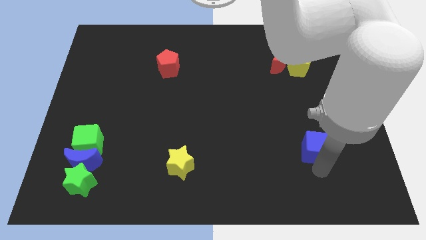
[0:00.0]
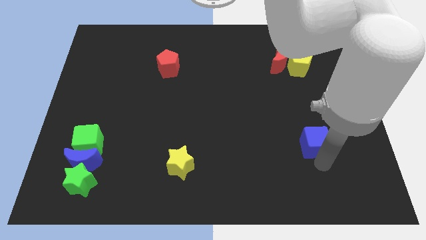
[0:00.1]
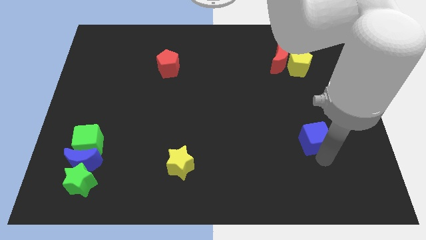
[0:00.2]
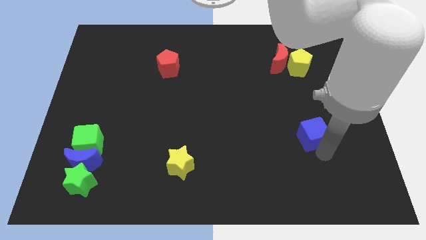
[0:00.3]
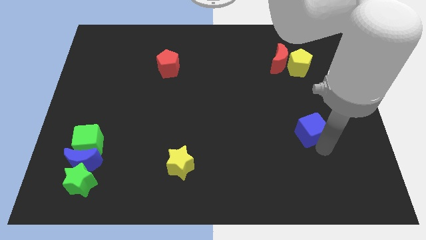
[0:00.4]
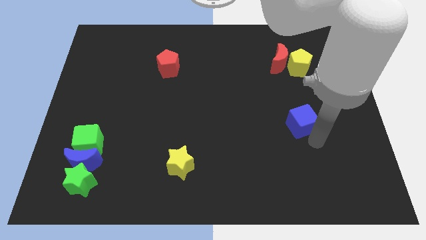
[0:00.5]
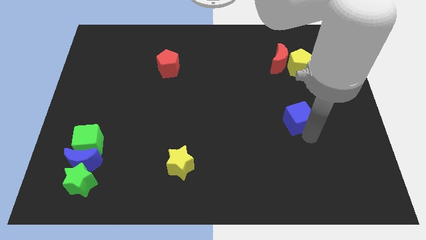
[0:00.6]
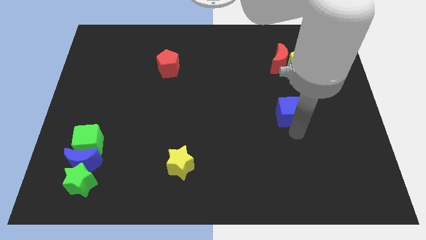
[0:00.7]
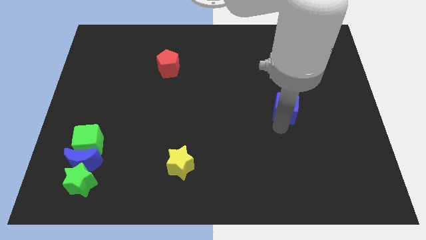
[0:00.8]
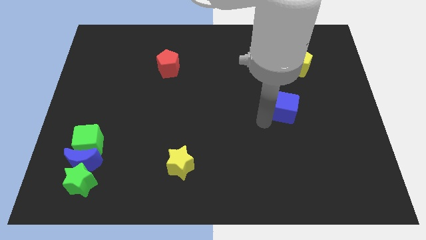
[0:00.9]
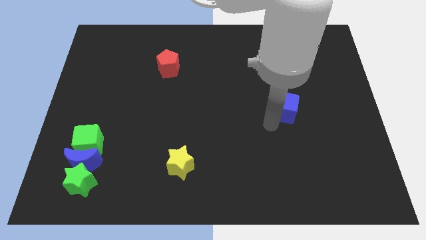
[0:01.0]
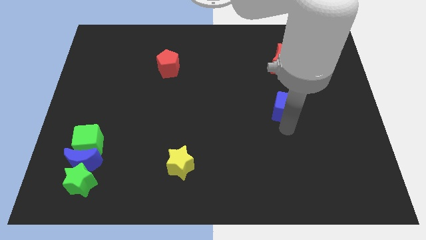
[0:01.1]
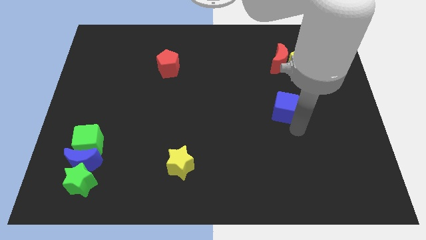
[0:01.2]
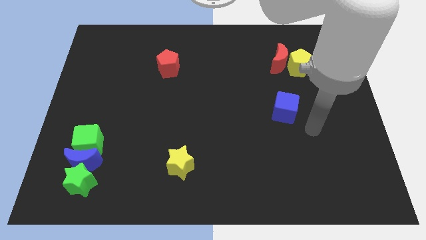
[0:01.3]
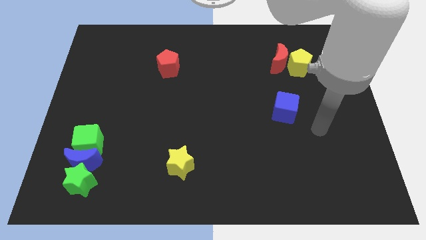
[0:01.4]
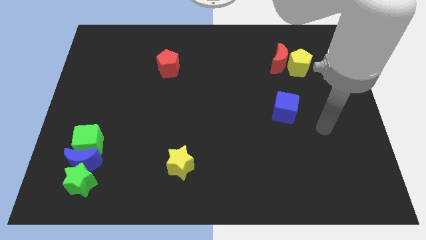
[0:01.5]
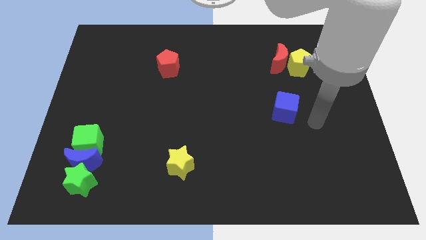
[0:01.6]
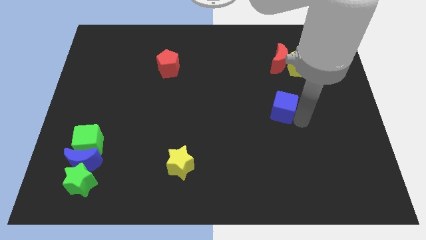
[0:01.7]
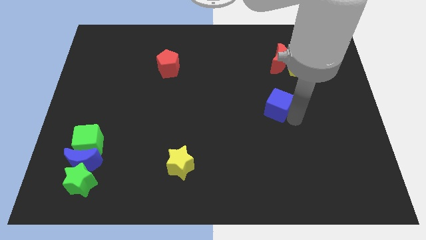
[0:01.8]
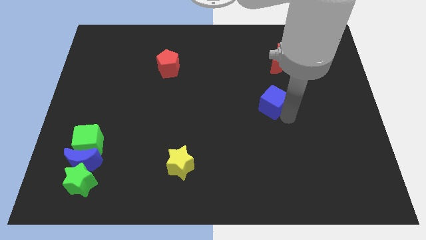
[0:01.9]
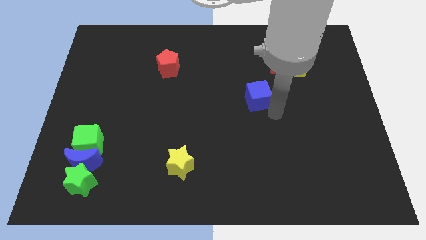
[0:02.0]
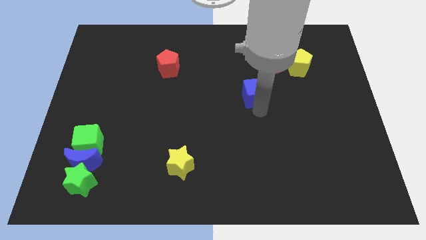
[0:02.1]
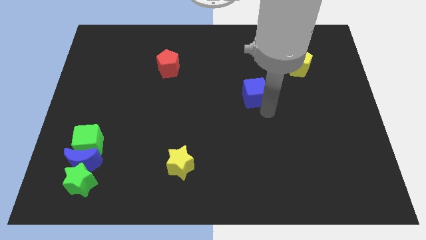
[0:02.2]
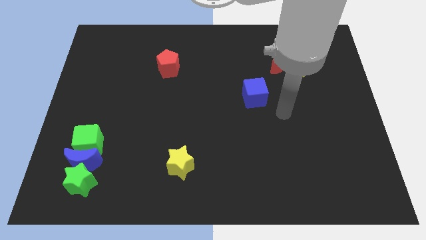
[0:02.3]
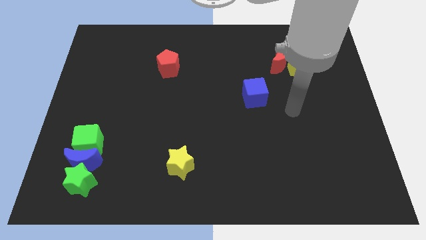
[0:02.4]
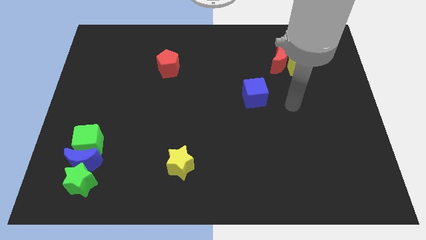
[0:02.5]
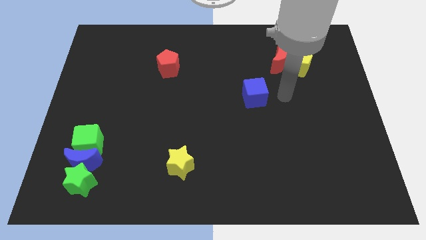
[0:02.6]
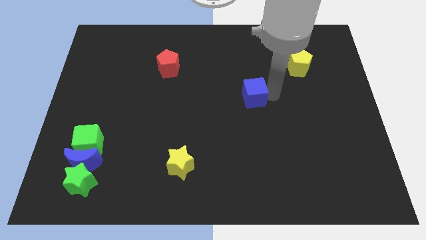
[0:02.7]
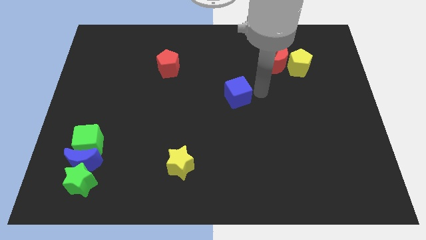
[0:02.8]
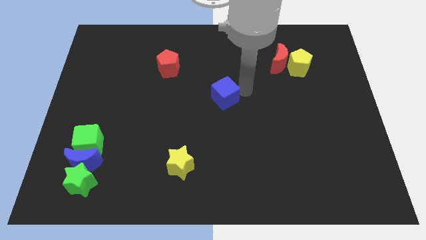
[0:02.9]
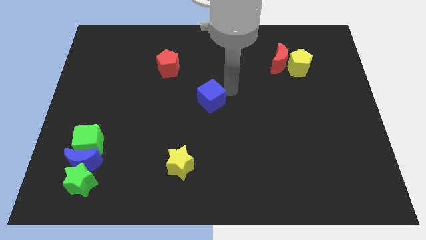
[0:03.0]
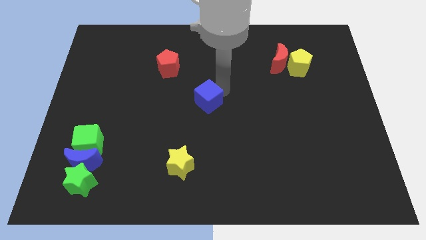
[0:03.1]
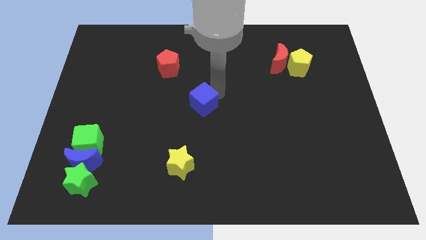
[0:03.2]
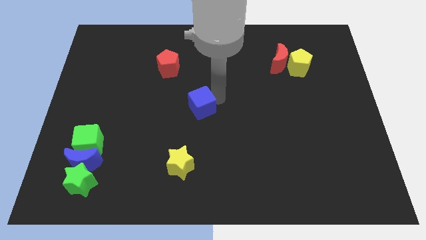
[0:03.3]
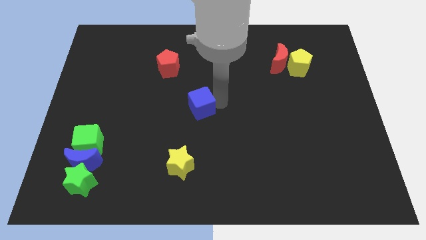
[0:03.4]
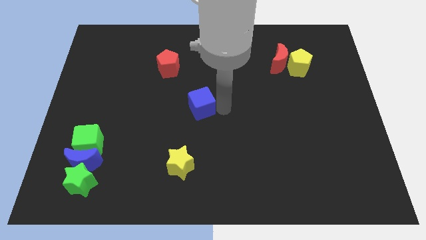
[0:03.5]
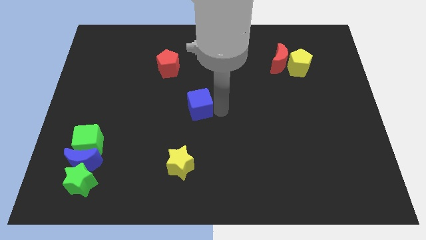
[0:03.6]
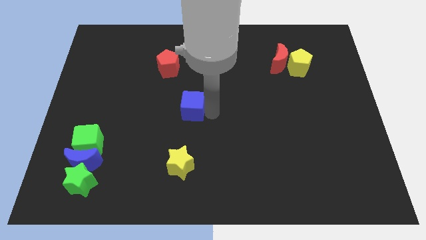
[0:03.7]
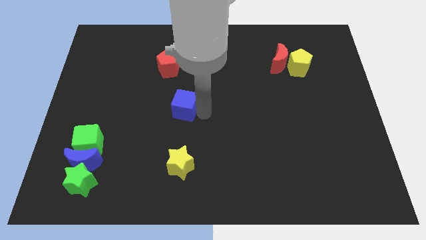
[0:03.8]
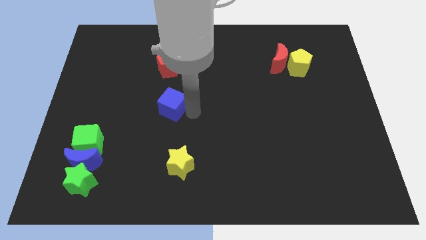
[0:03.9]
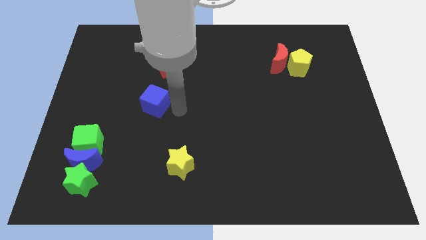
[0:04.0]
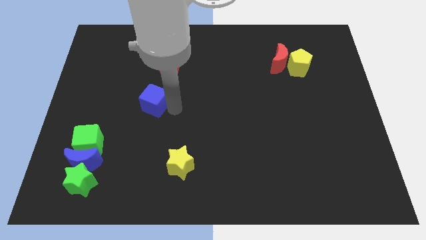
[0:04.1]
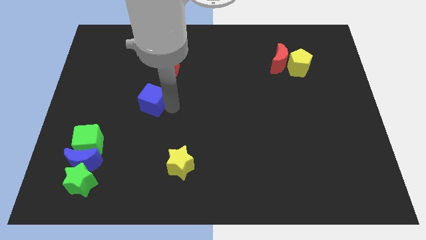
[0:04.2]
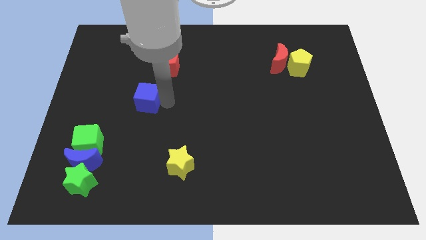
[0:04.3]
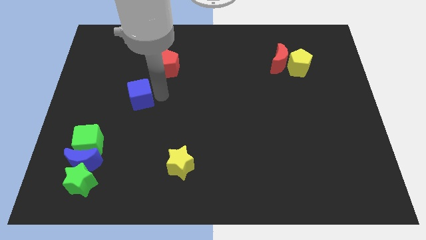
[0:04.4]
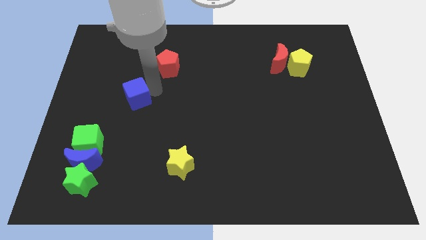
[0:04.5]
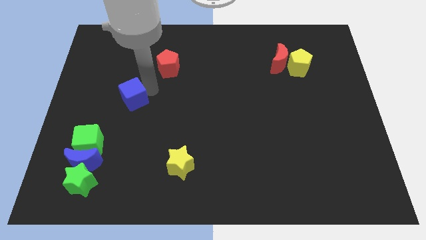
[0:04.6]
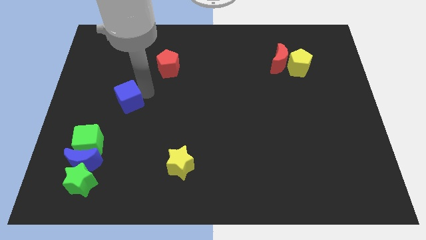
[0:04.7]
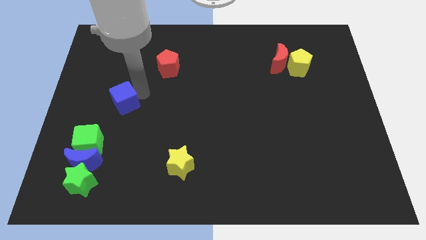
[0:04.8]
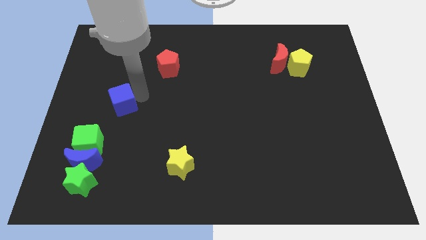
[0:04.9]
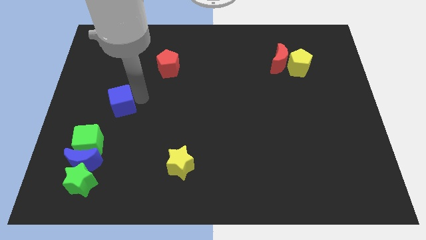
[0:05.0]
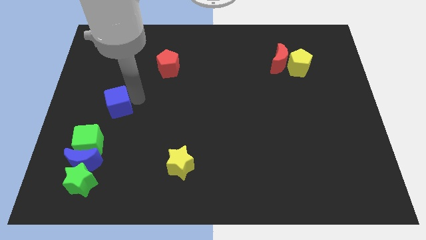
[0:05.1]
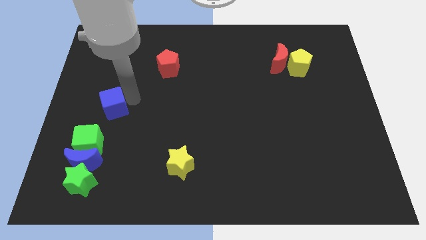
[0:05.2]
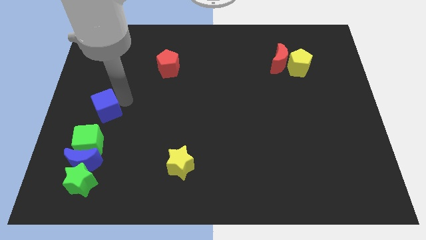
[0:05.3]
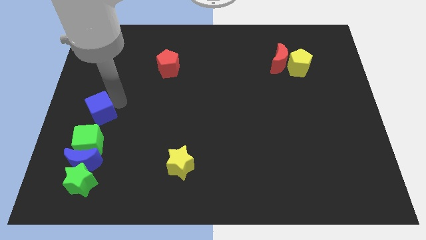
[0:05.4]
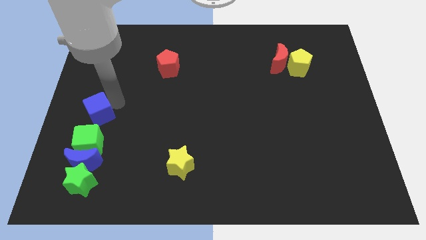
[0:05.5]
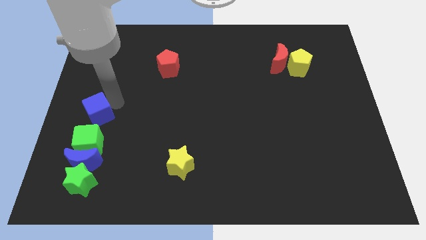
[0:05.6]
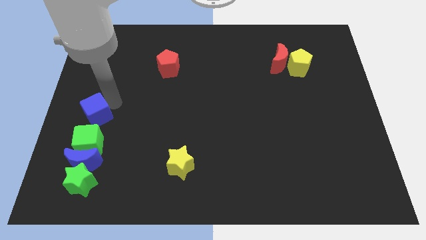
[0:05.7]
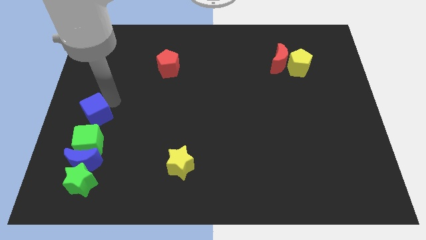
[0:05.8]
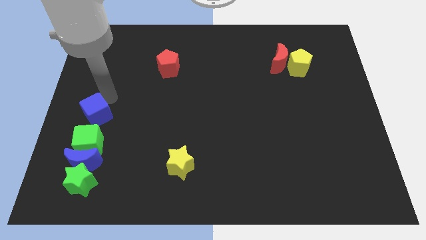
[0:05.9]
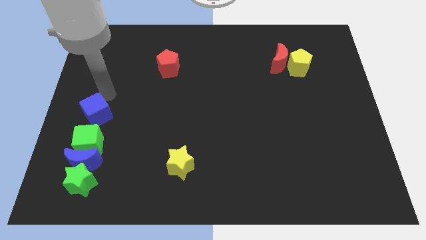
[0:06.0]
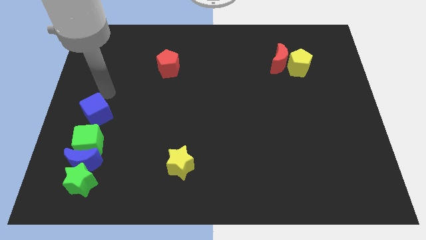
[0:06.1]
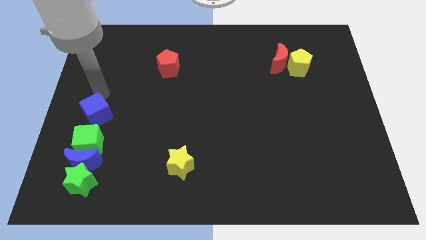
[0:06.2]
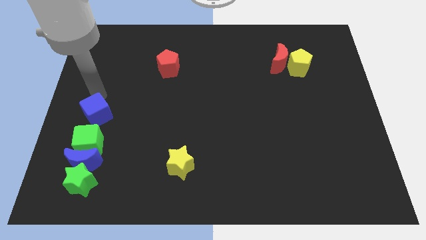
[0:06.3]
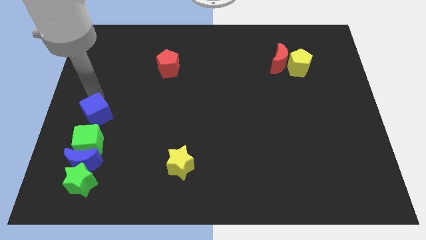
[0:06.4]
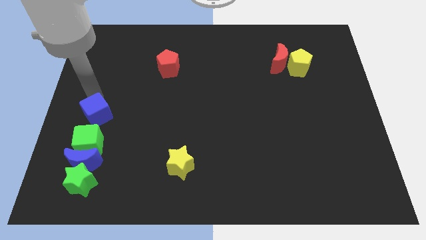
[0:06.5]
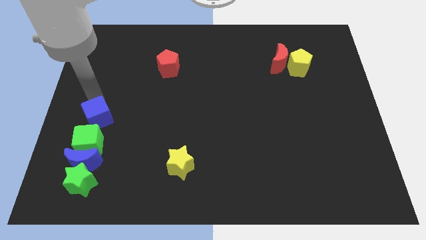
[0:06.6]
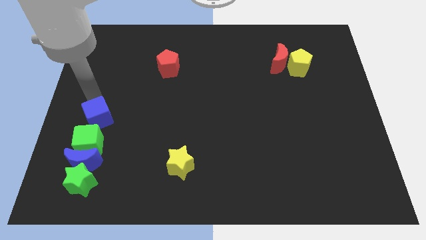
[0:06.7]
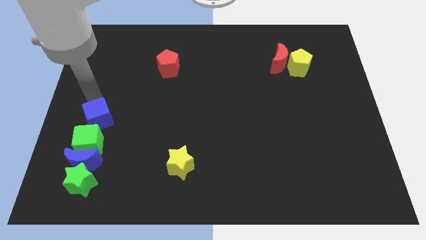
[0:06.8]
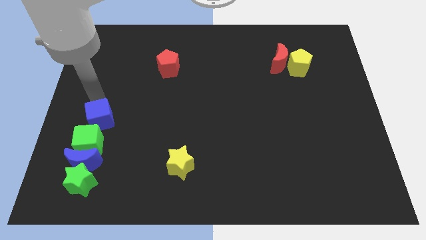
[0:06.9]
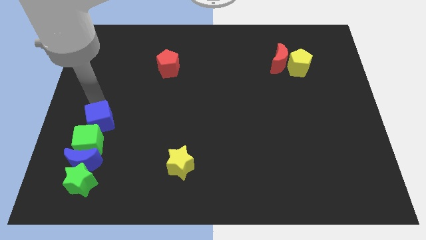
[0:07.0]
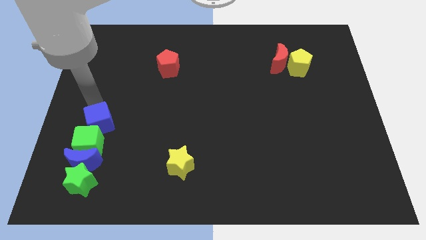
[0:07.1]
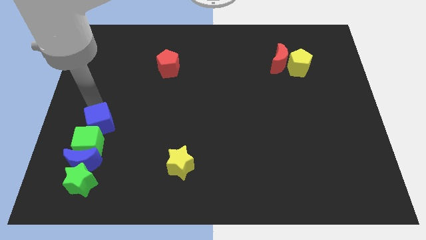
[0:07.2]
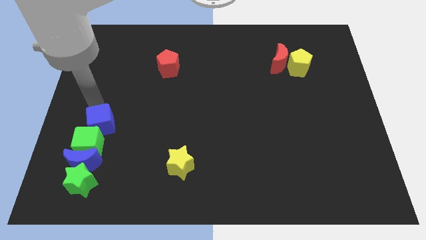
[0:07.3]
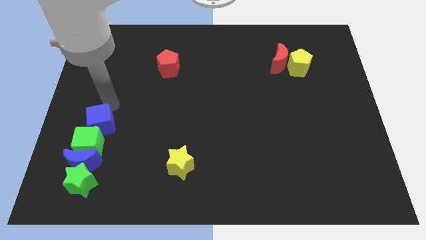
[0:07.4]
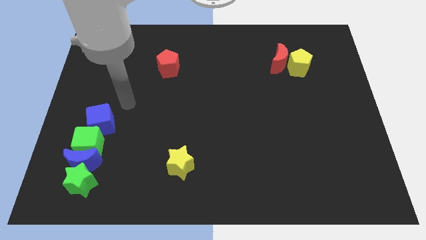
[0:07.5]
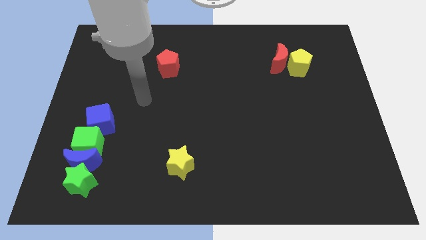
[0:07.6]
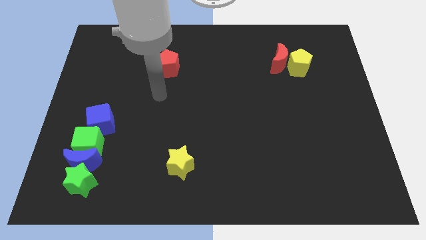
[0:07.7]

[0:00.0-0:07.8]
push the blue cube above the green cube

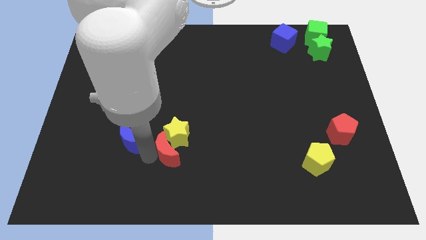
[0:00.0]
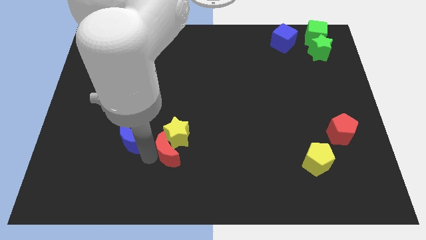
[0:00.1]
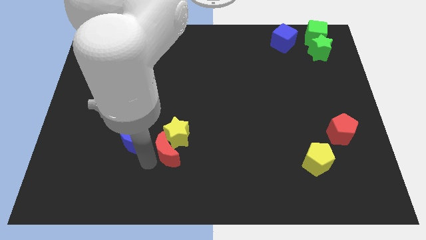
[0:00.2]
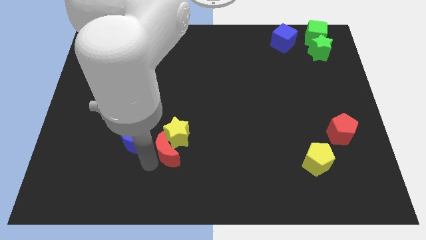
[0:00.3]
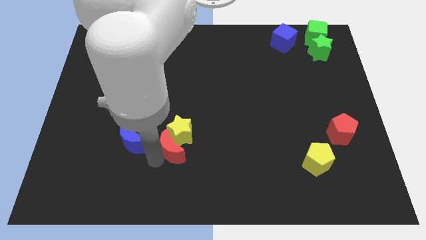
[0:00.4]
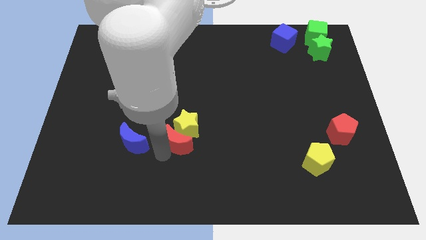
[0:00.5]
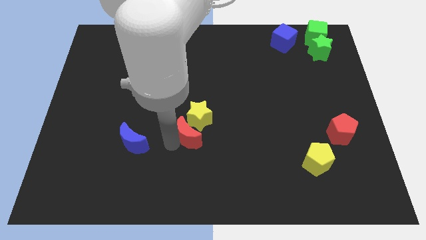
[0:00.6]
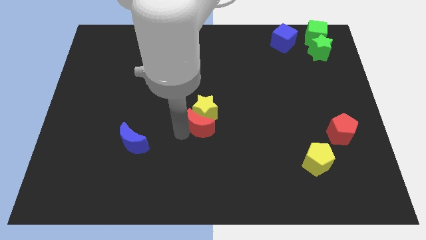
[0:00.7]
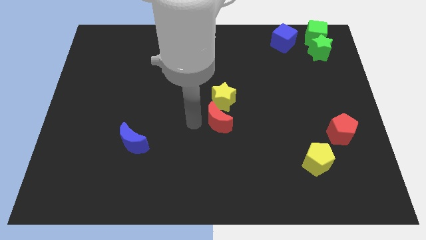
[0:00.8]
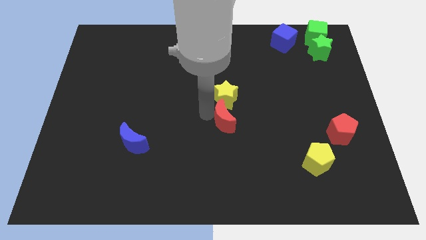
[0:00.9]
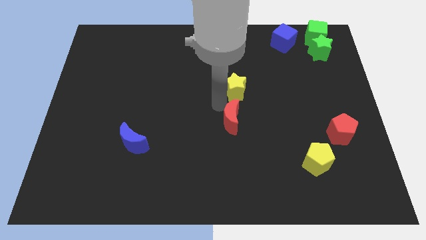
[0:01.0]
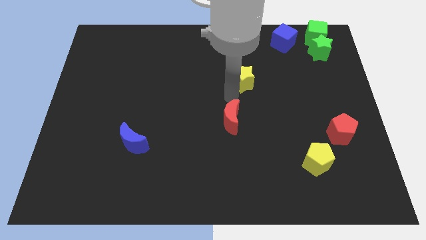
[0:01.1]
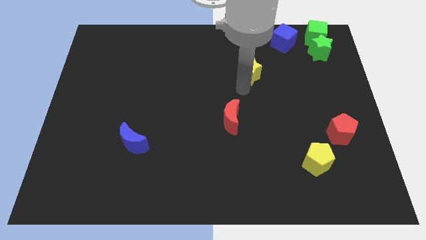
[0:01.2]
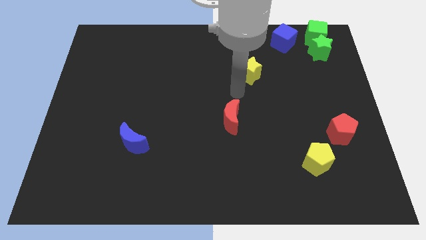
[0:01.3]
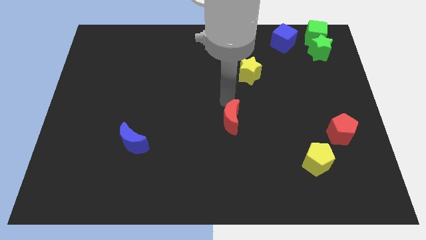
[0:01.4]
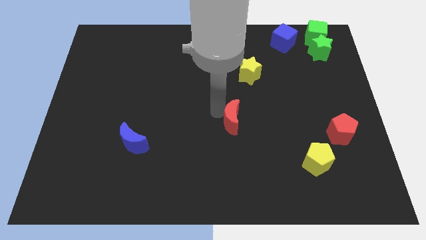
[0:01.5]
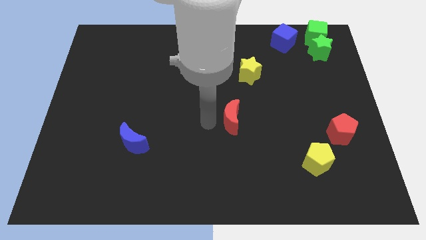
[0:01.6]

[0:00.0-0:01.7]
separate the red moon and yellow star
